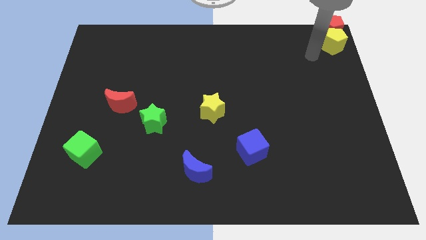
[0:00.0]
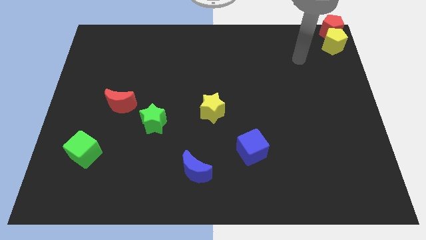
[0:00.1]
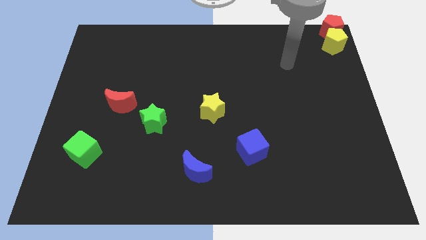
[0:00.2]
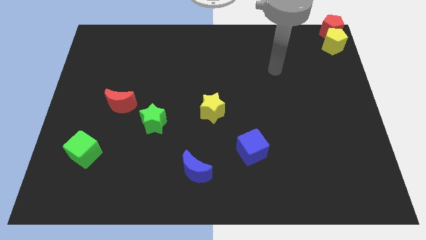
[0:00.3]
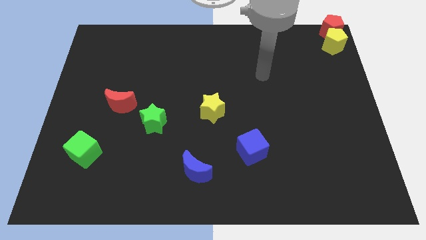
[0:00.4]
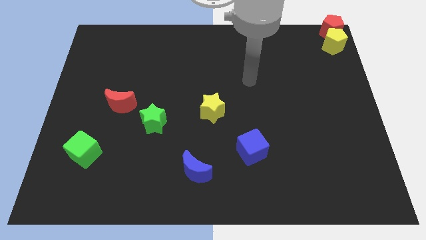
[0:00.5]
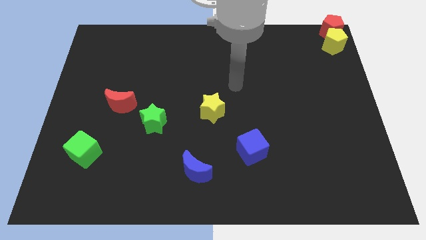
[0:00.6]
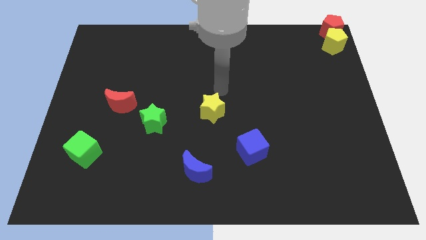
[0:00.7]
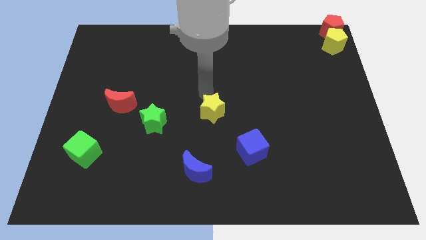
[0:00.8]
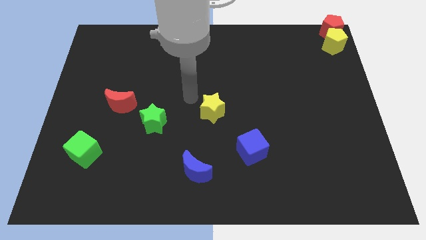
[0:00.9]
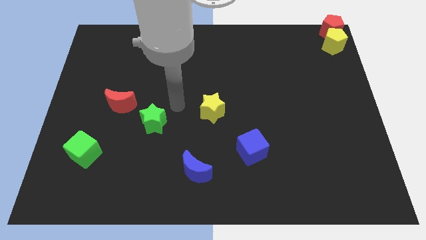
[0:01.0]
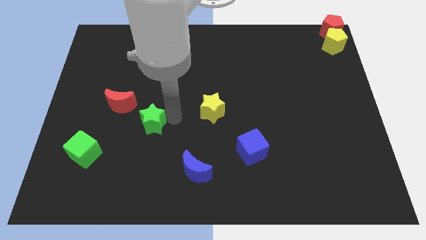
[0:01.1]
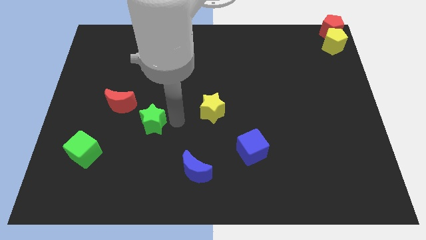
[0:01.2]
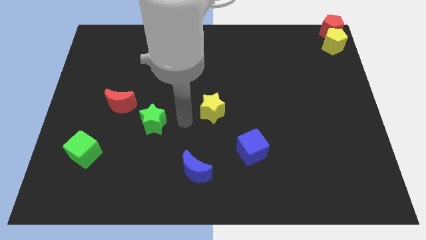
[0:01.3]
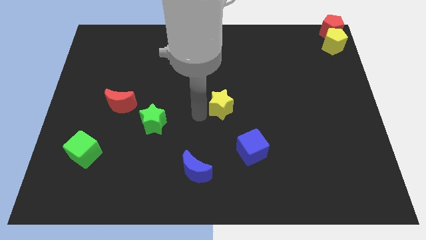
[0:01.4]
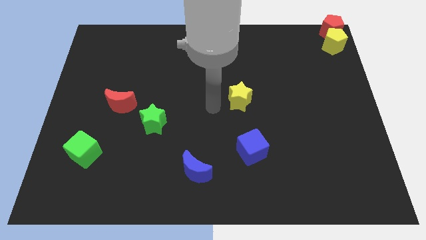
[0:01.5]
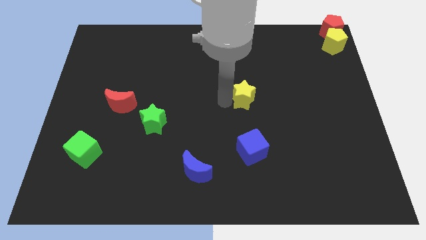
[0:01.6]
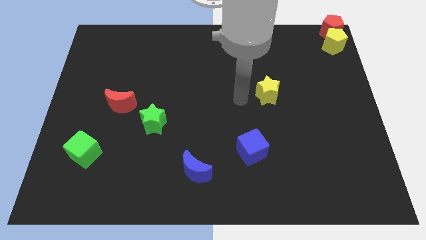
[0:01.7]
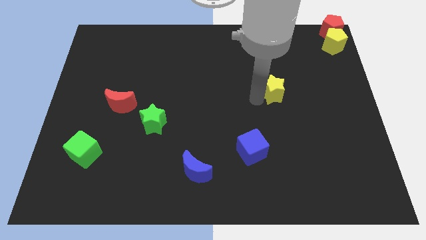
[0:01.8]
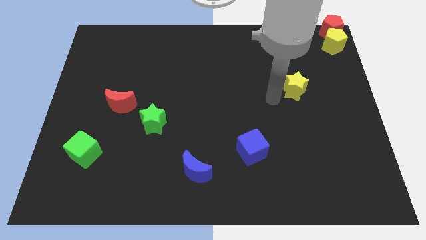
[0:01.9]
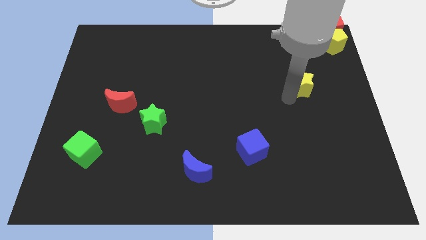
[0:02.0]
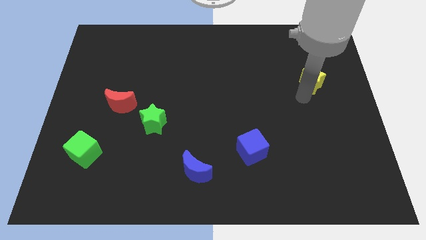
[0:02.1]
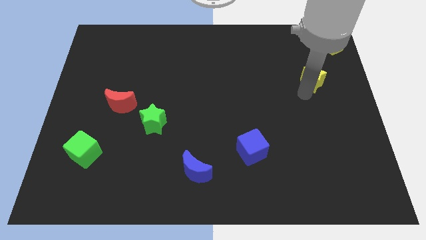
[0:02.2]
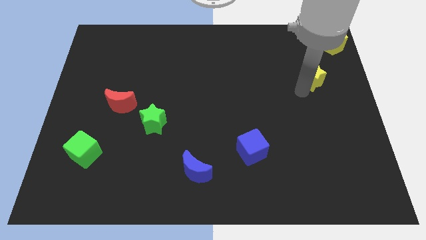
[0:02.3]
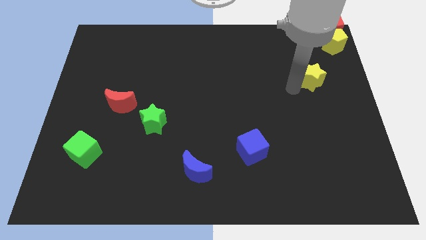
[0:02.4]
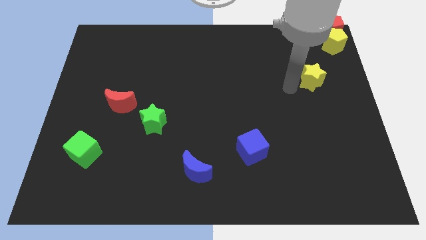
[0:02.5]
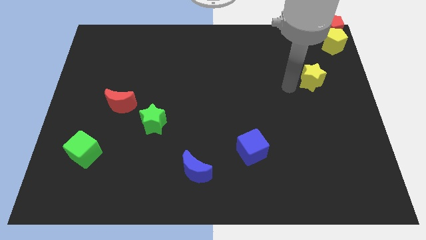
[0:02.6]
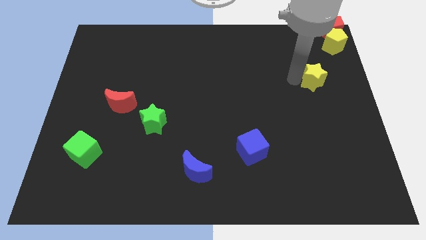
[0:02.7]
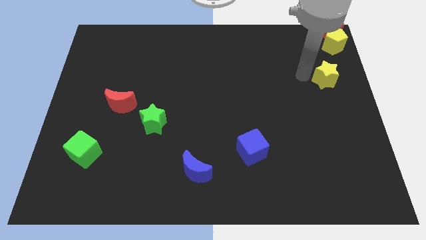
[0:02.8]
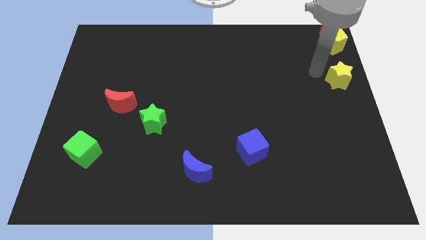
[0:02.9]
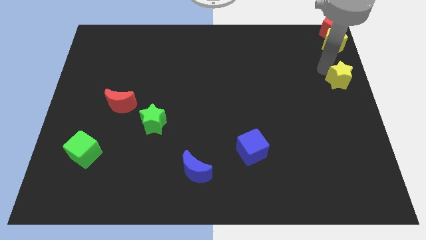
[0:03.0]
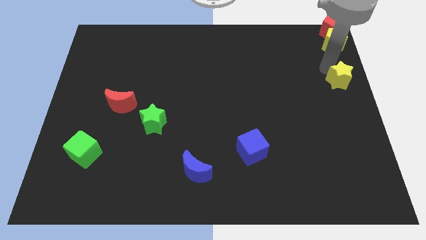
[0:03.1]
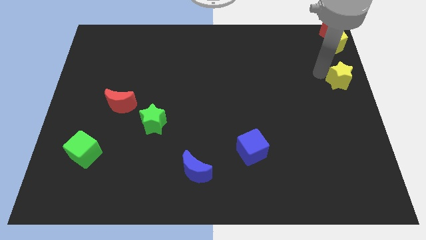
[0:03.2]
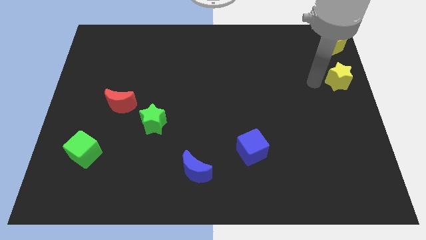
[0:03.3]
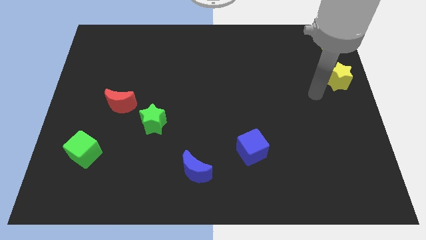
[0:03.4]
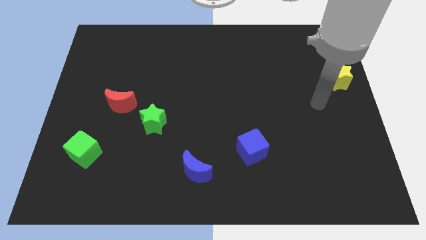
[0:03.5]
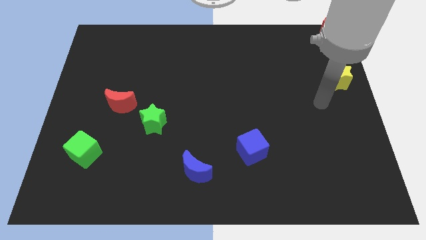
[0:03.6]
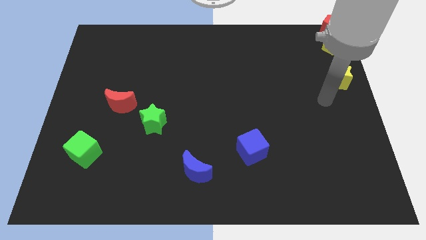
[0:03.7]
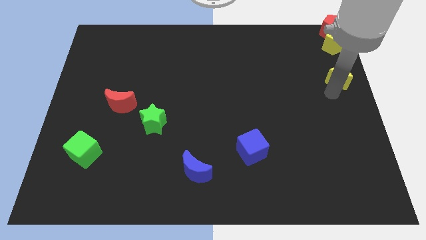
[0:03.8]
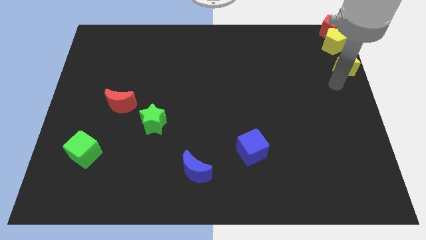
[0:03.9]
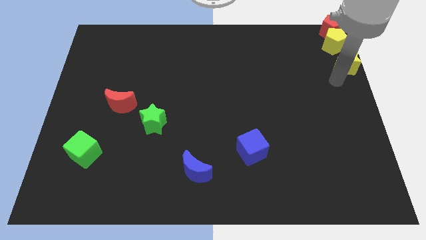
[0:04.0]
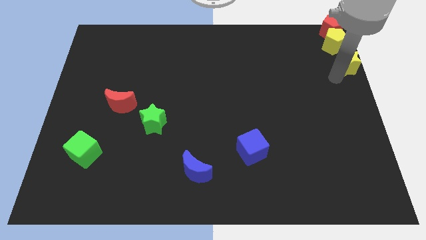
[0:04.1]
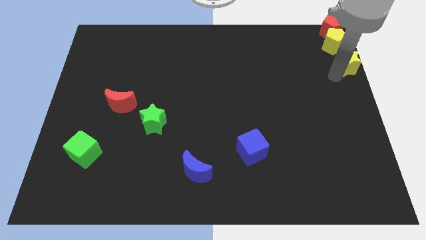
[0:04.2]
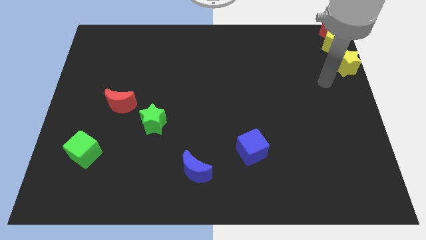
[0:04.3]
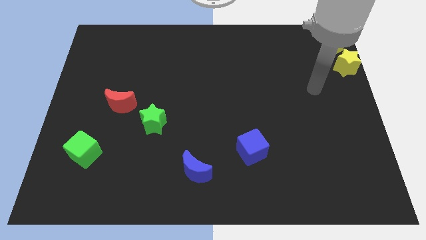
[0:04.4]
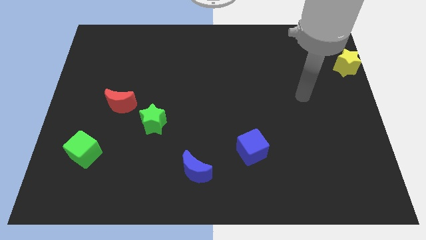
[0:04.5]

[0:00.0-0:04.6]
place the yellow star under the yellow pentagon

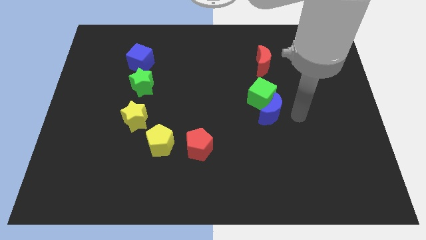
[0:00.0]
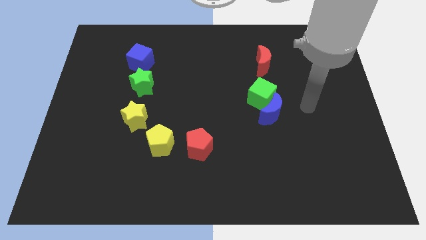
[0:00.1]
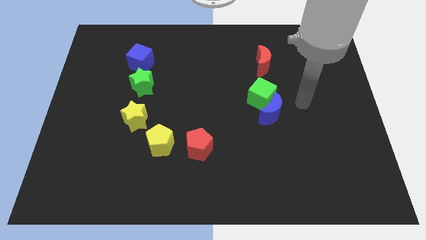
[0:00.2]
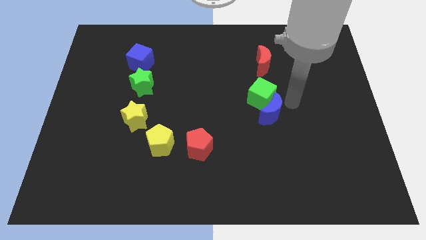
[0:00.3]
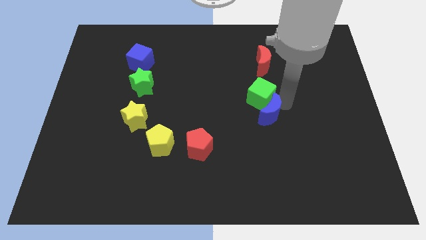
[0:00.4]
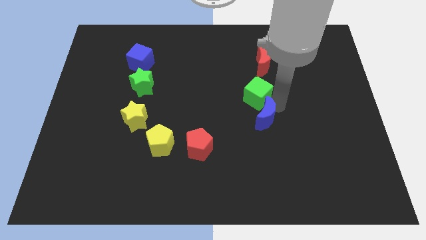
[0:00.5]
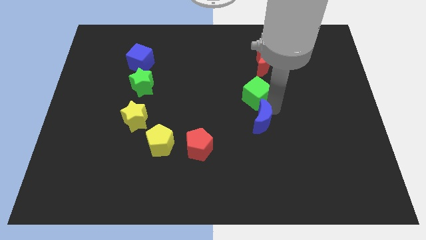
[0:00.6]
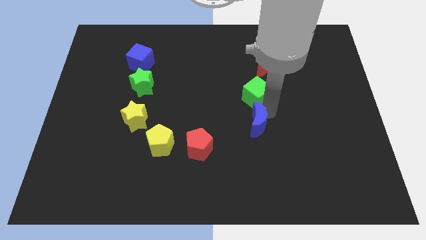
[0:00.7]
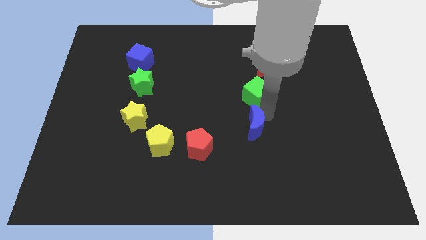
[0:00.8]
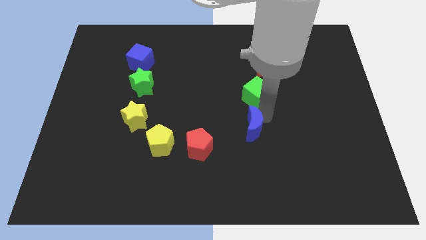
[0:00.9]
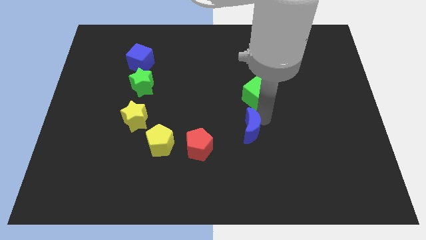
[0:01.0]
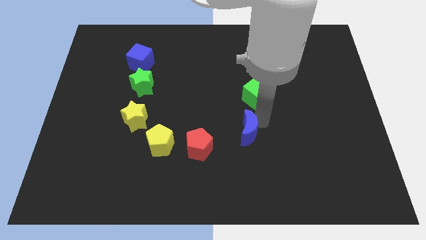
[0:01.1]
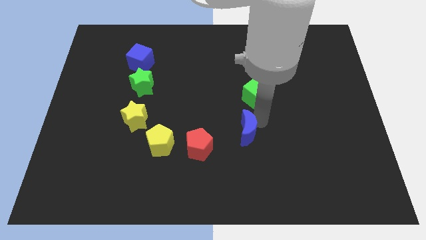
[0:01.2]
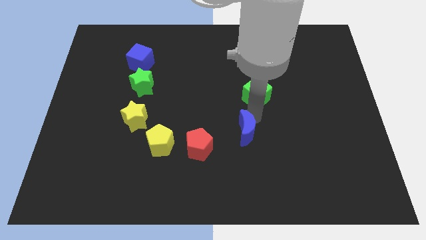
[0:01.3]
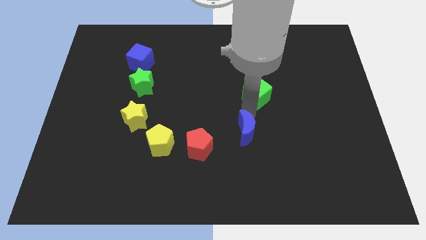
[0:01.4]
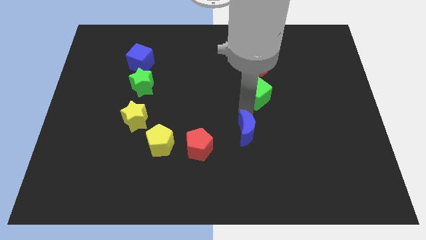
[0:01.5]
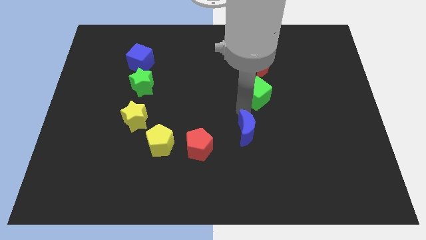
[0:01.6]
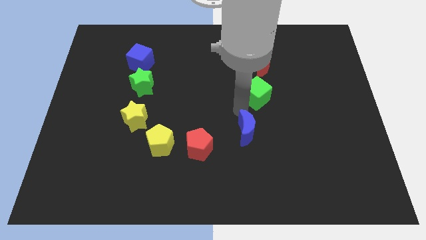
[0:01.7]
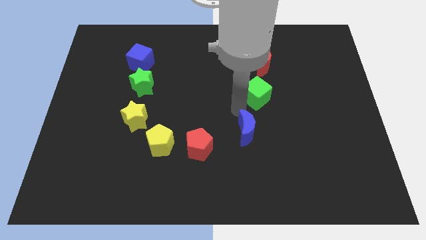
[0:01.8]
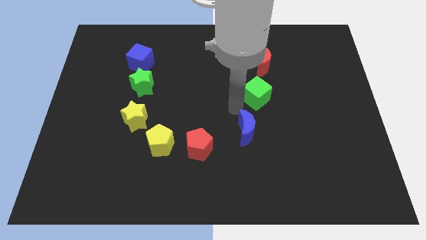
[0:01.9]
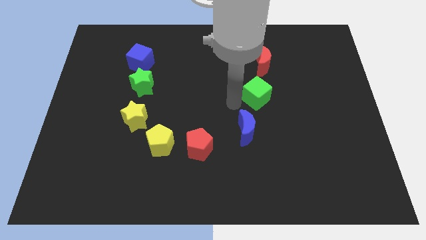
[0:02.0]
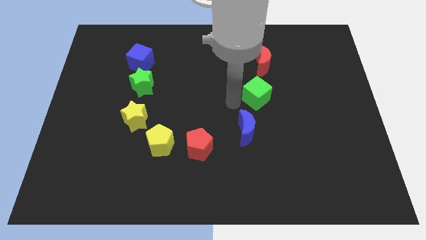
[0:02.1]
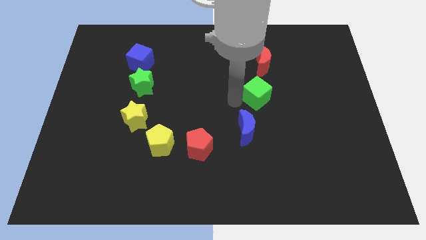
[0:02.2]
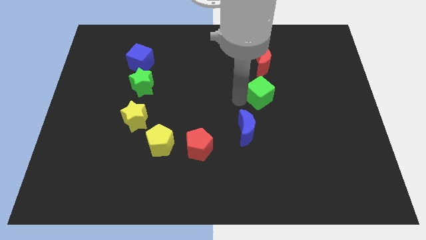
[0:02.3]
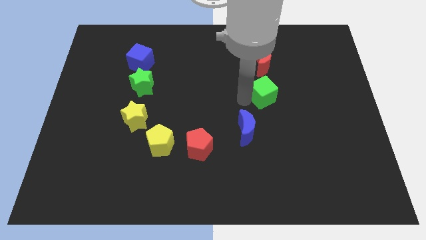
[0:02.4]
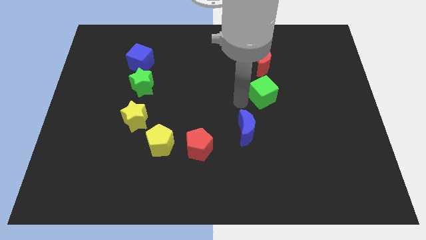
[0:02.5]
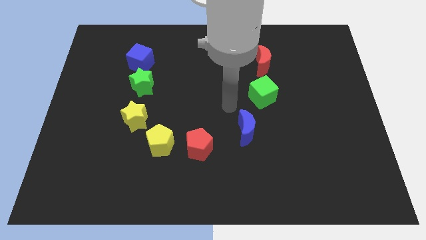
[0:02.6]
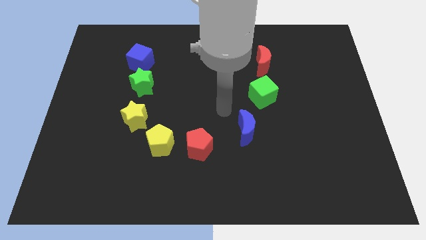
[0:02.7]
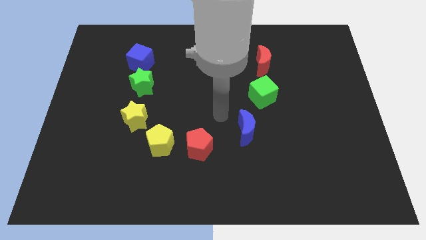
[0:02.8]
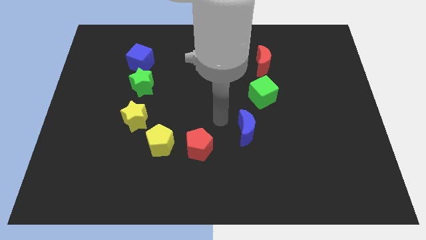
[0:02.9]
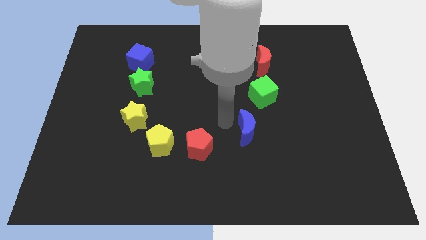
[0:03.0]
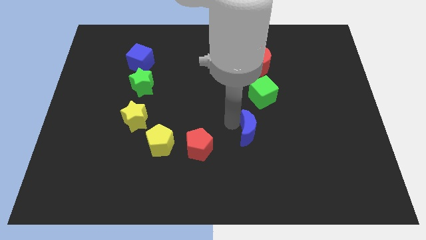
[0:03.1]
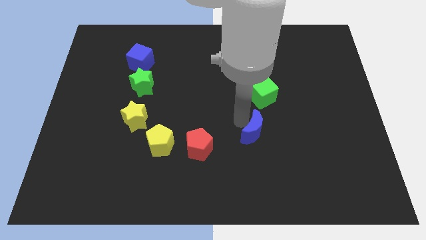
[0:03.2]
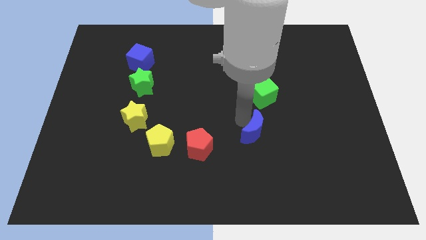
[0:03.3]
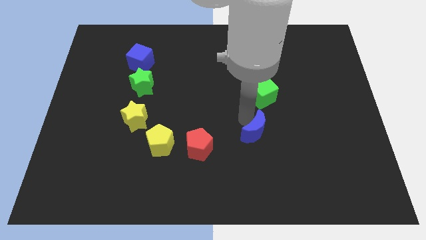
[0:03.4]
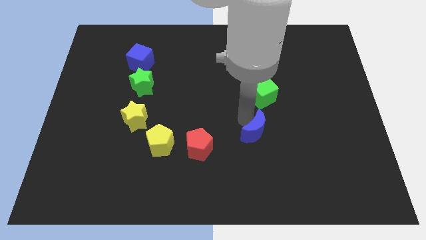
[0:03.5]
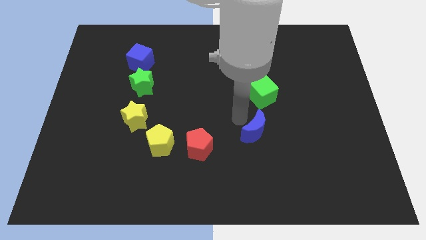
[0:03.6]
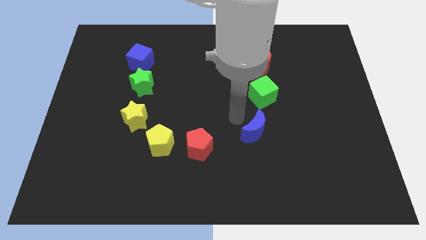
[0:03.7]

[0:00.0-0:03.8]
adjust blue moon and the green cube to form ushape

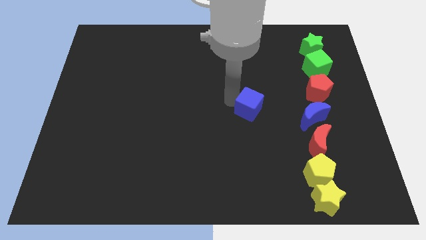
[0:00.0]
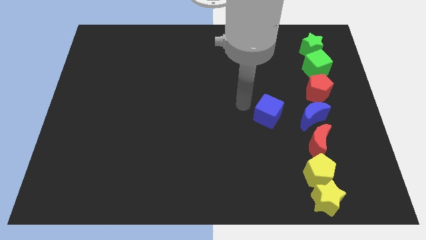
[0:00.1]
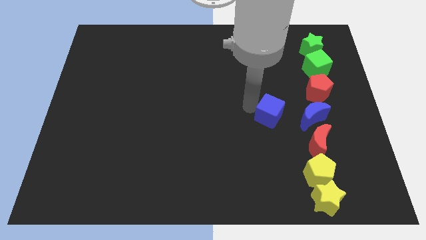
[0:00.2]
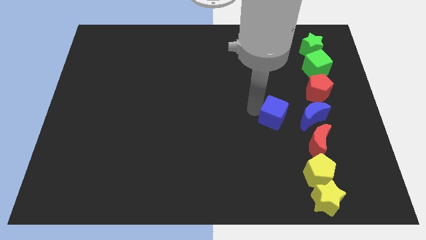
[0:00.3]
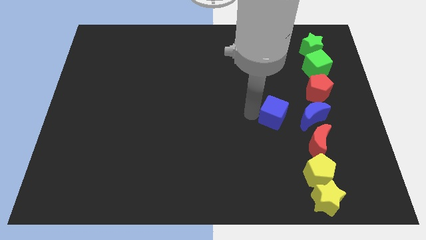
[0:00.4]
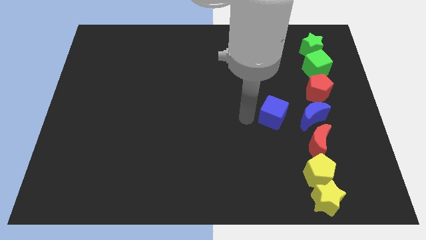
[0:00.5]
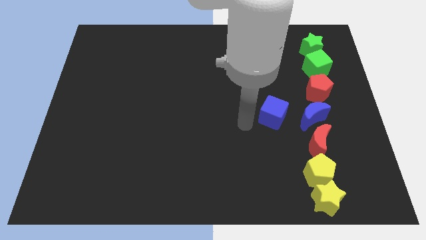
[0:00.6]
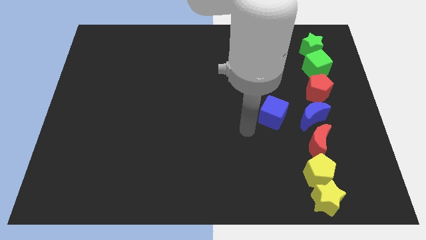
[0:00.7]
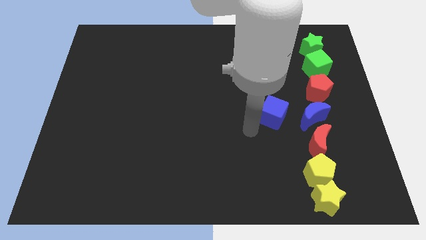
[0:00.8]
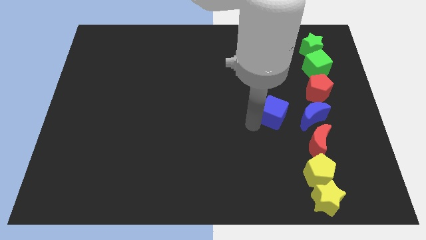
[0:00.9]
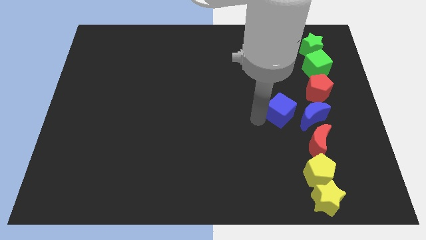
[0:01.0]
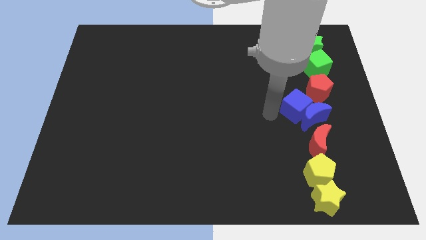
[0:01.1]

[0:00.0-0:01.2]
move the blue cube to the left of the blue crescent
